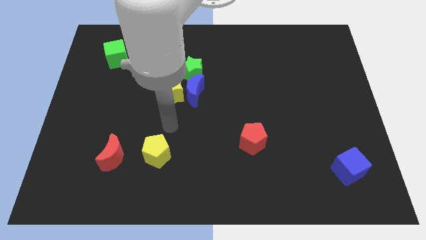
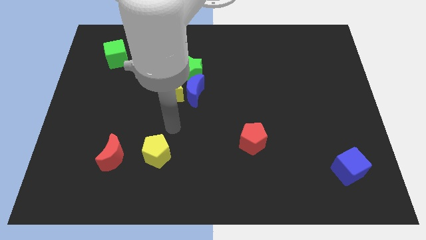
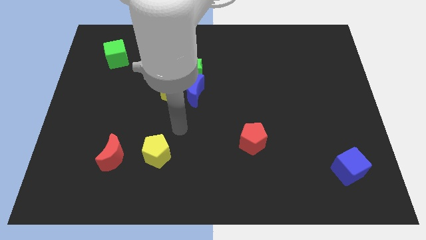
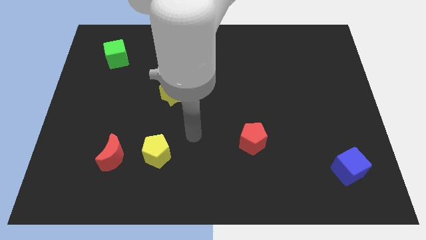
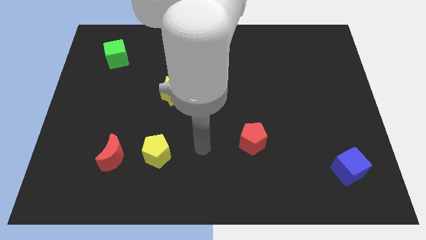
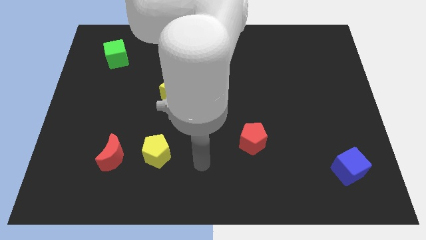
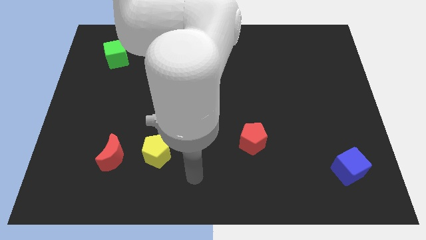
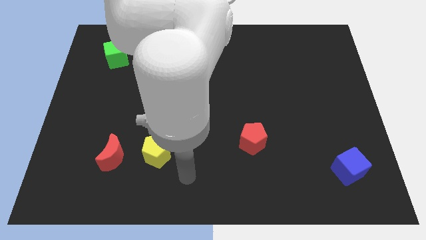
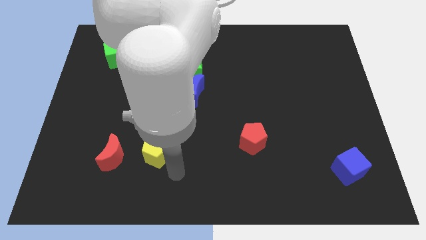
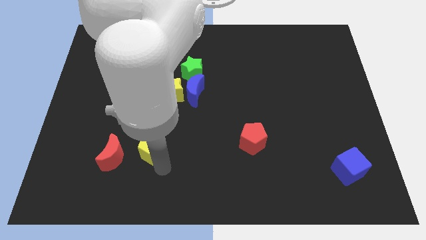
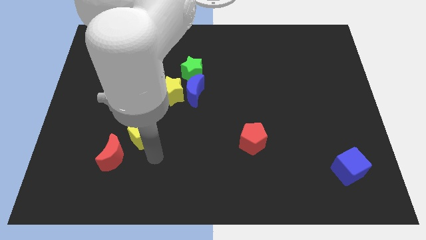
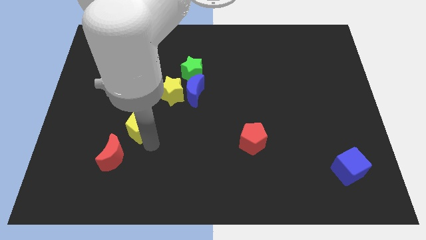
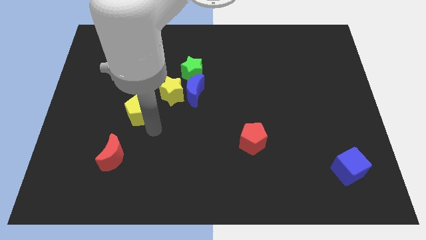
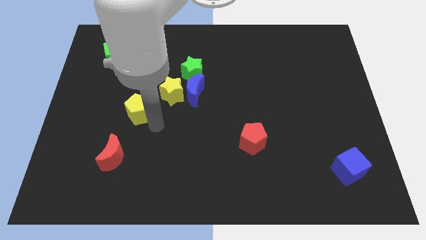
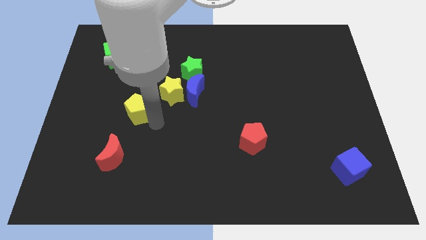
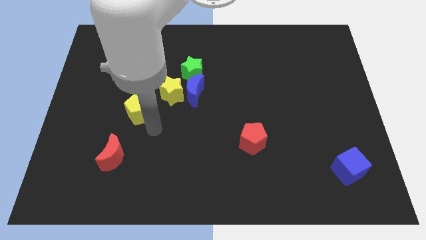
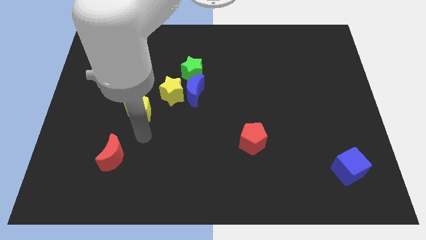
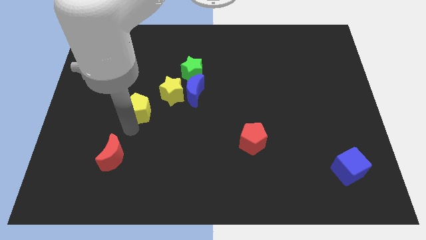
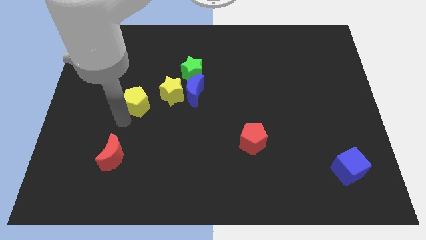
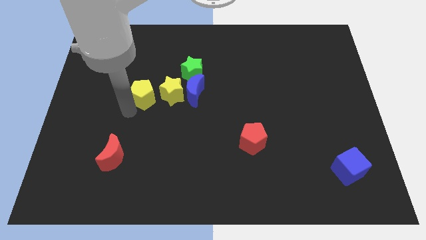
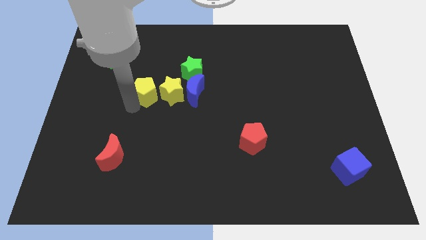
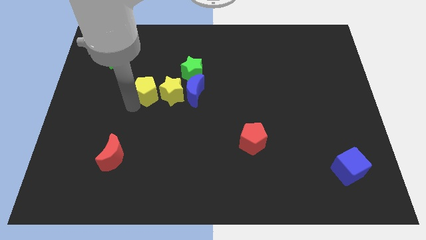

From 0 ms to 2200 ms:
place yellow pentagon to the left of the yellow star

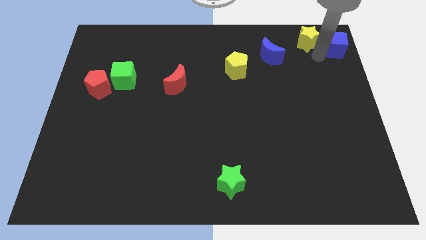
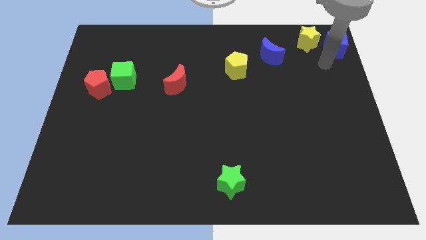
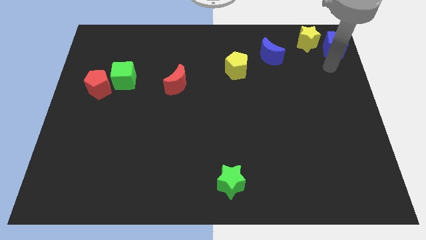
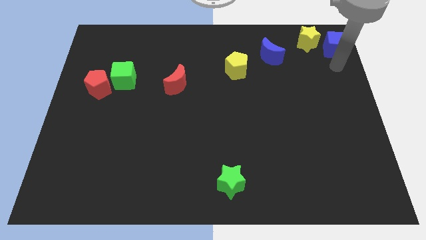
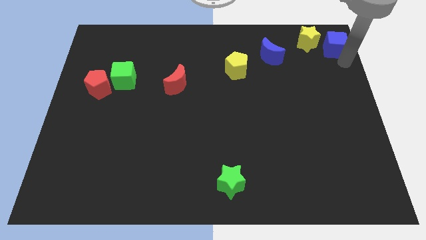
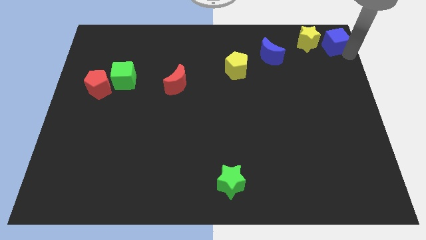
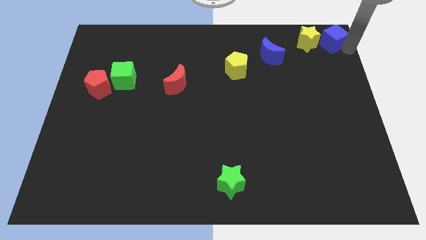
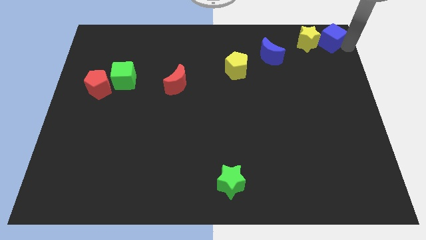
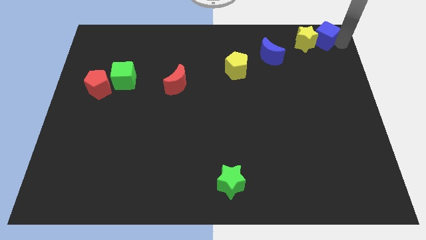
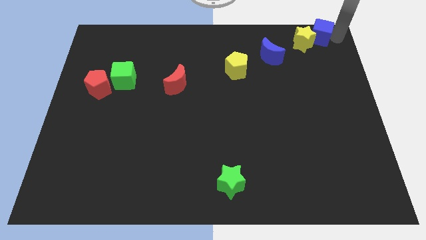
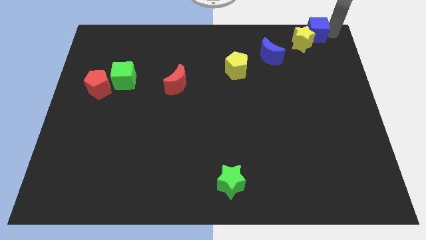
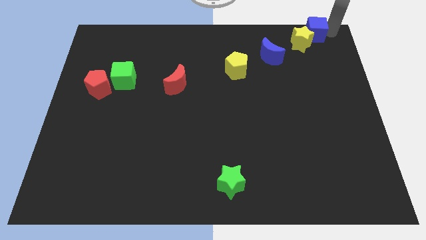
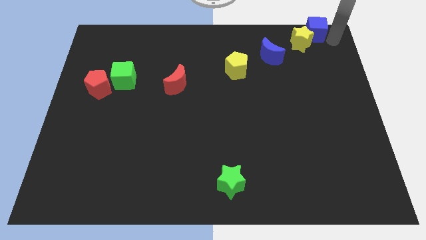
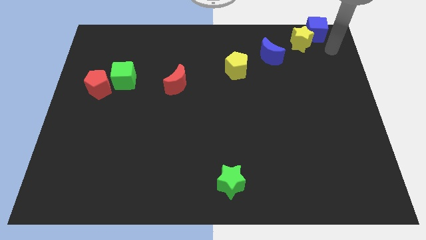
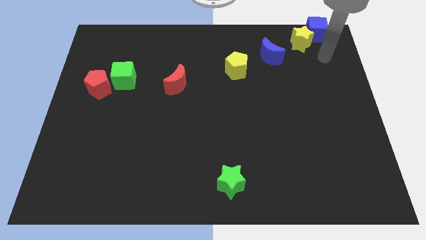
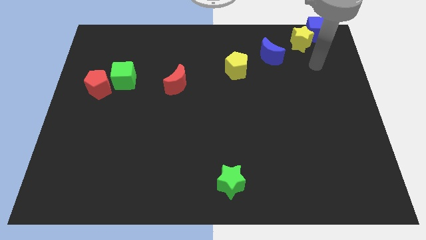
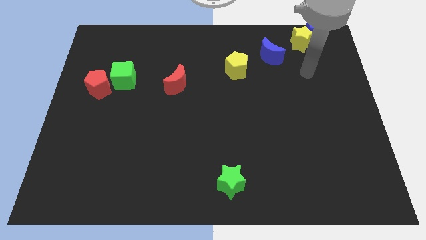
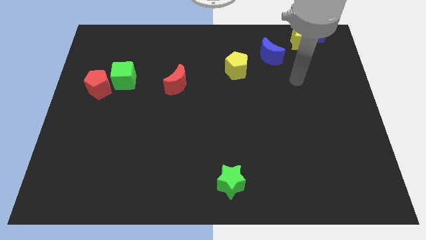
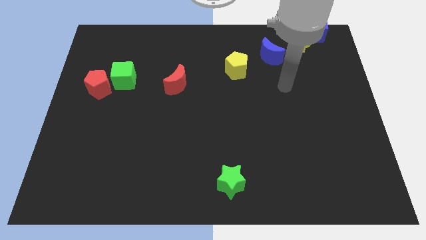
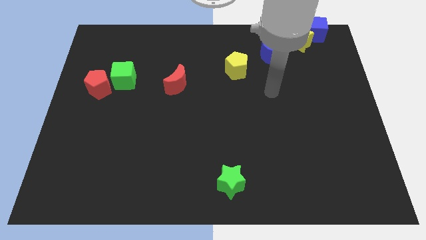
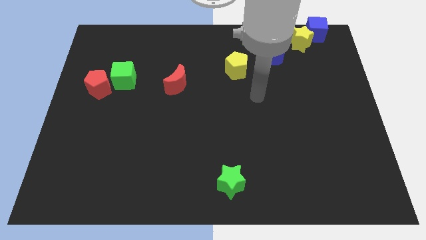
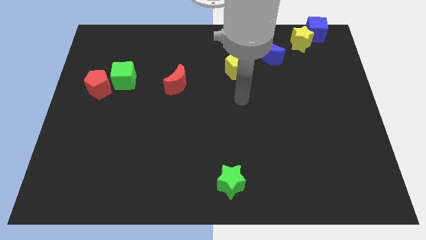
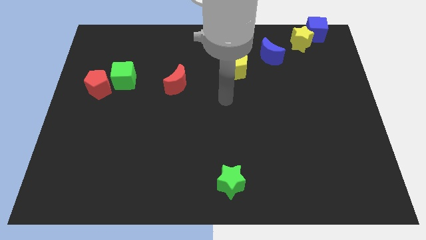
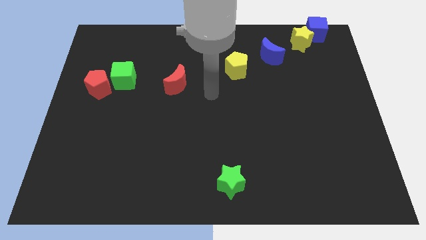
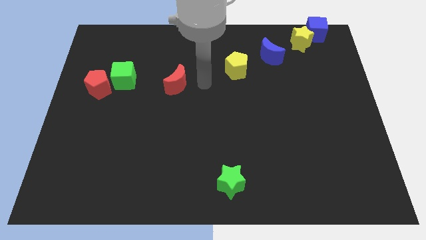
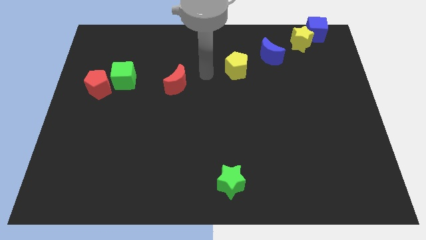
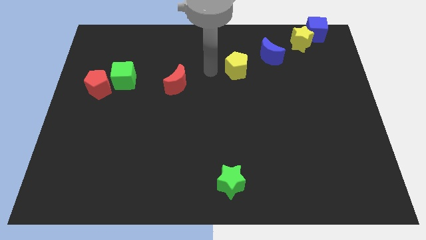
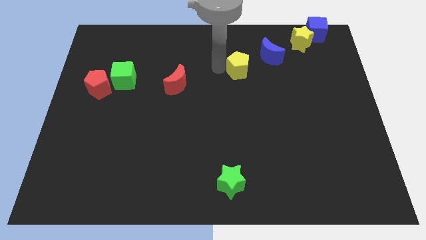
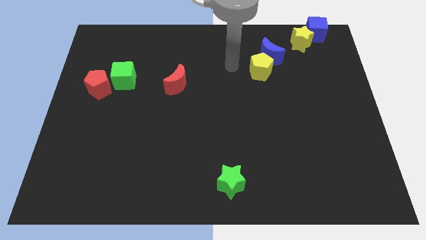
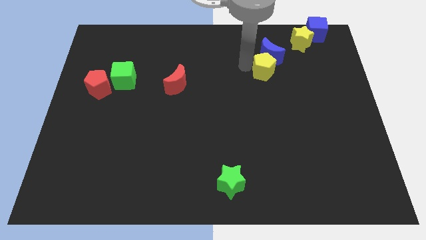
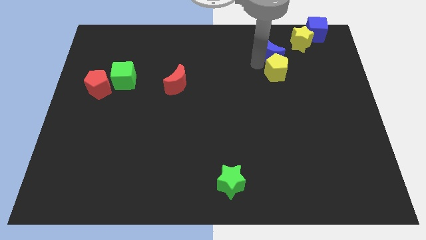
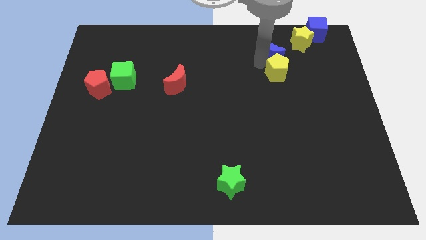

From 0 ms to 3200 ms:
push yellow pentagon below blue crescent

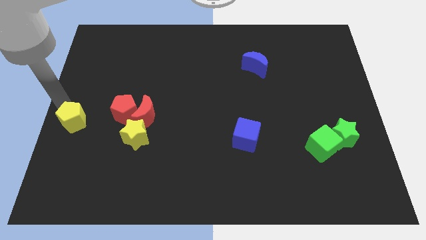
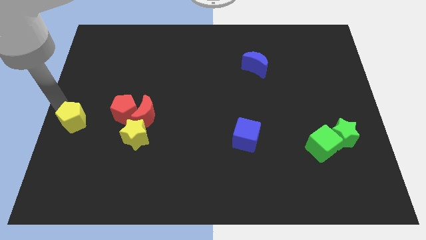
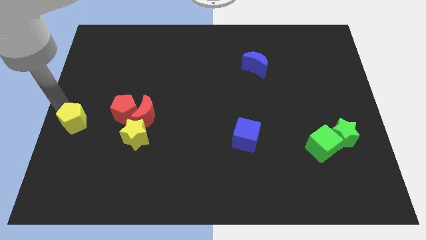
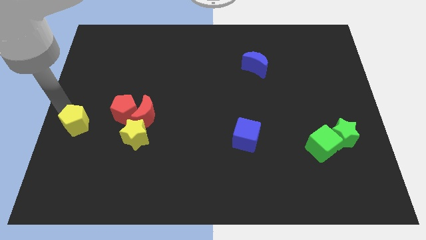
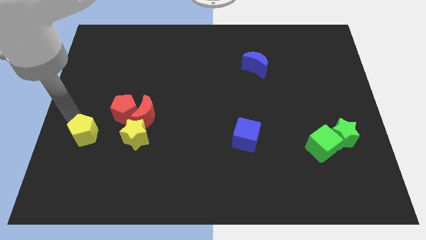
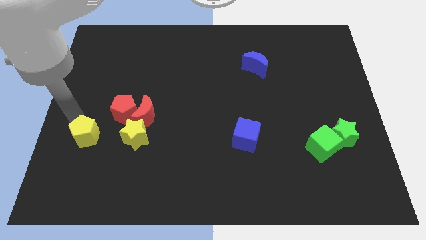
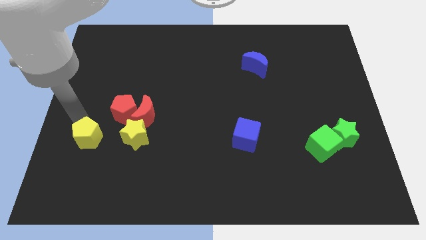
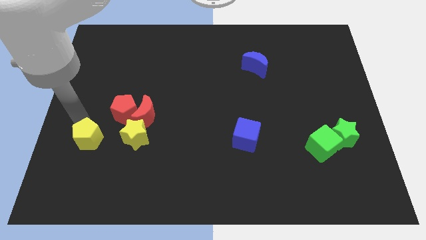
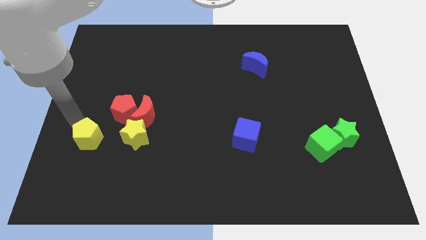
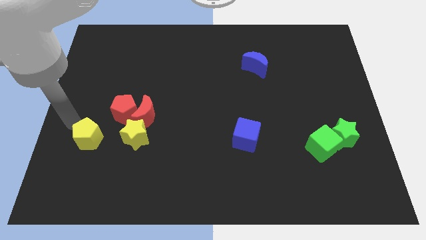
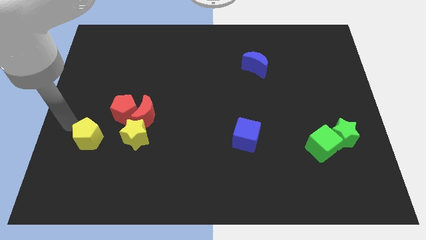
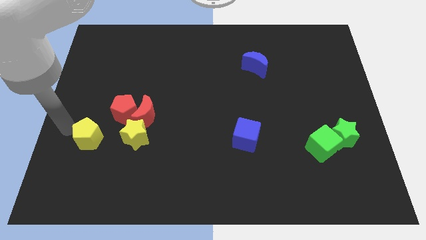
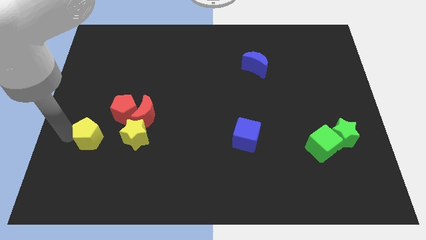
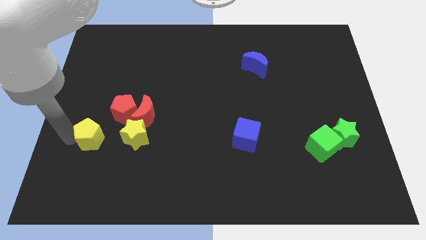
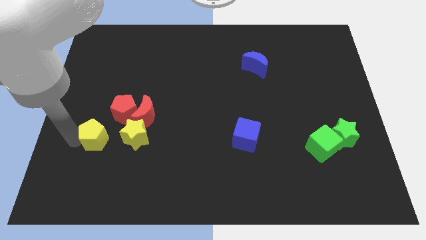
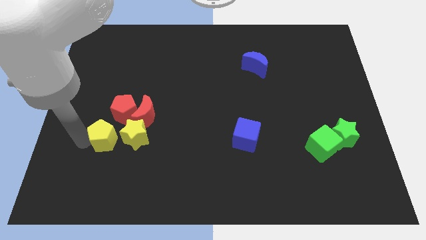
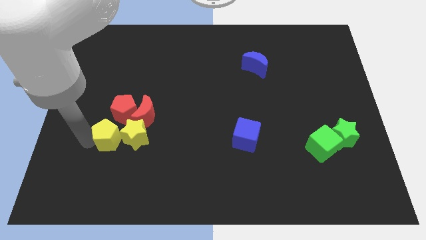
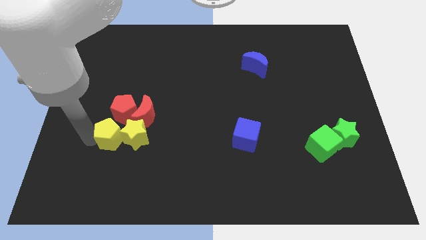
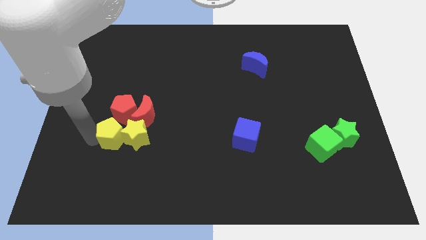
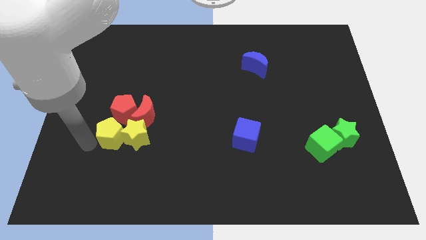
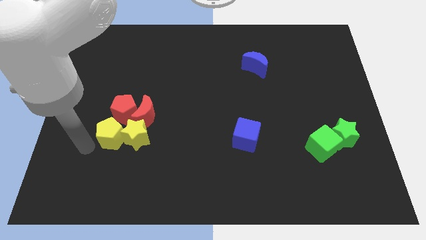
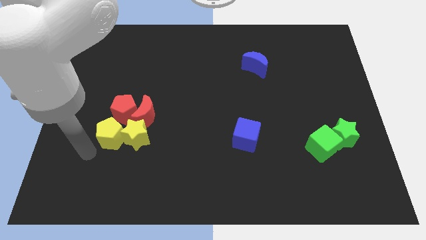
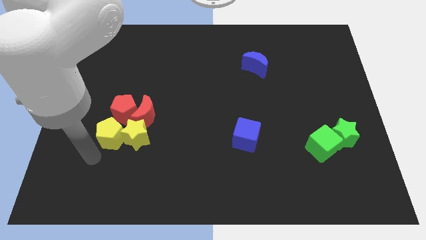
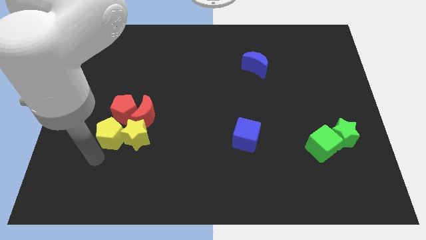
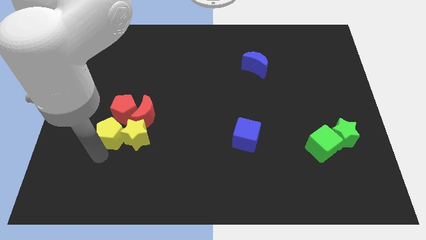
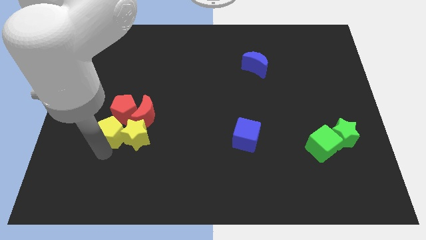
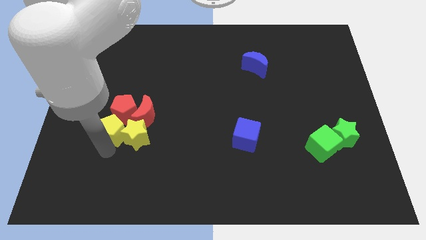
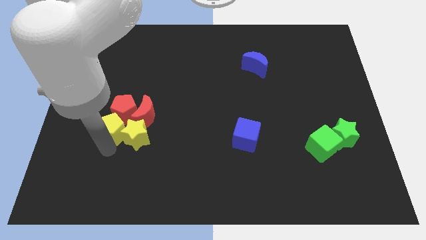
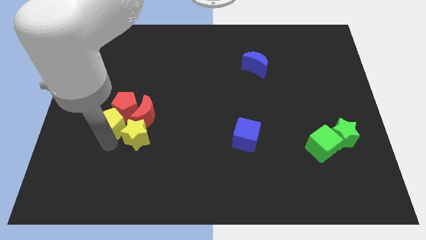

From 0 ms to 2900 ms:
move the yellow pentagon to the left of the yellow star

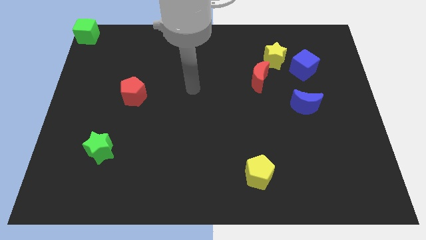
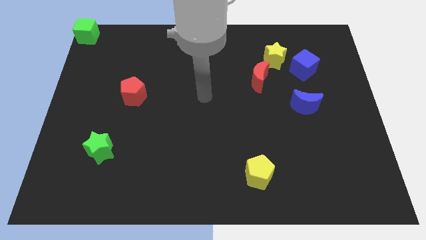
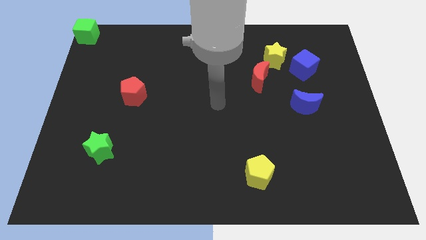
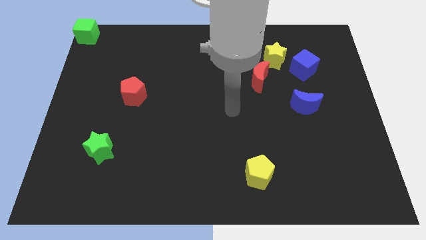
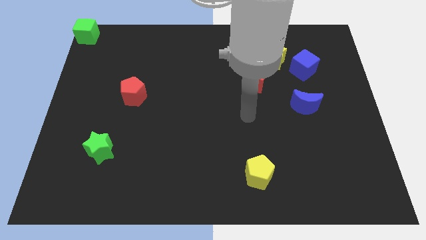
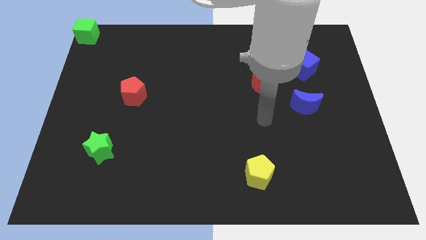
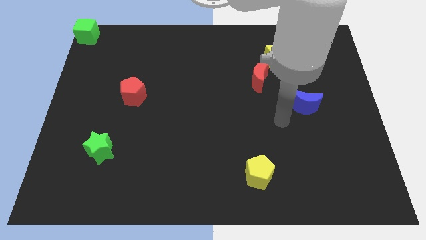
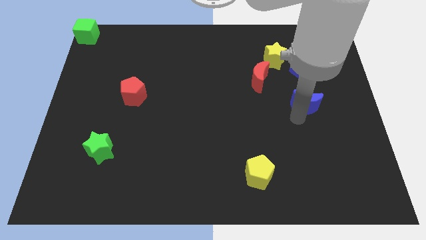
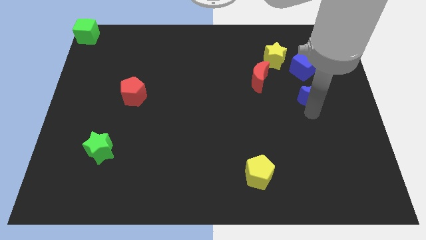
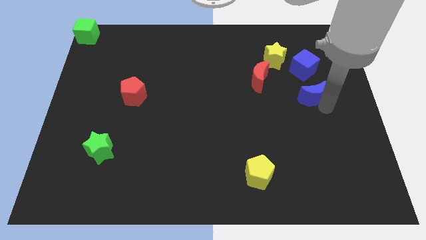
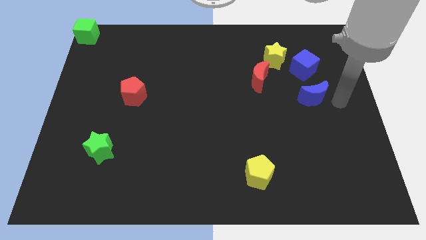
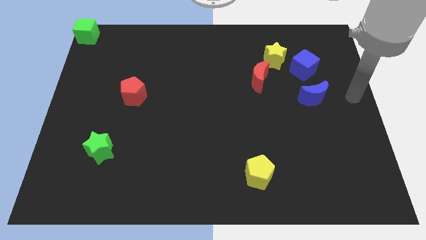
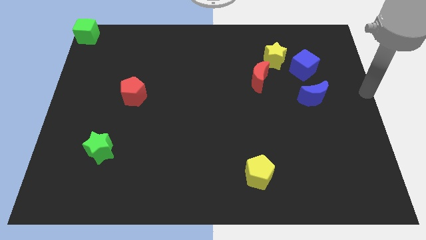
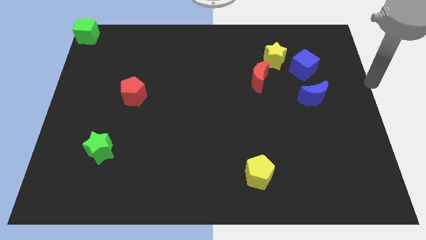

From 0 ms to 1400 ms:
push the blue crescent slightly up
